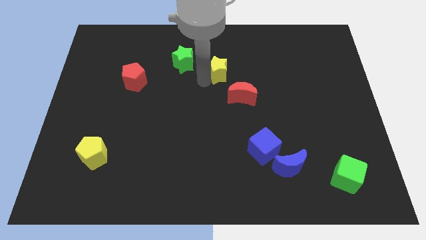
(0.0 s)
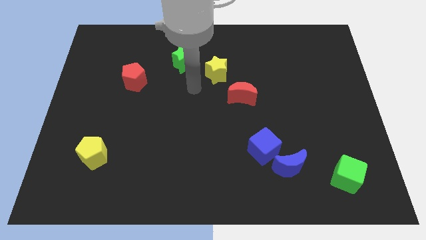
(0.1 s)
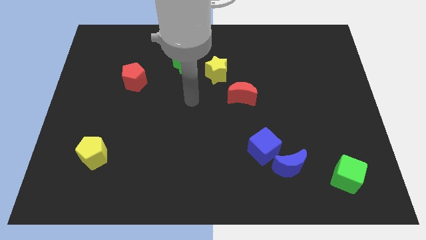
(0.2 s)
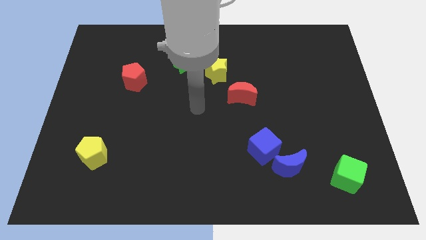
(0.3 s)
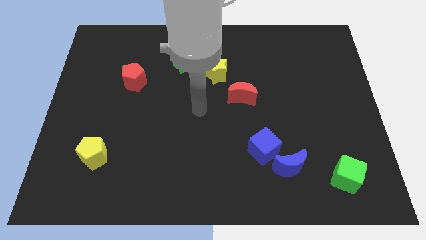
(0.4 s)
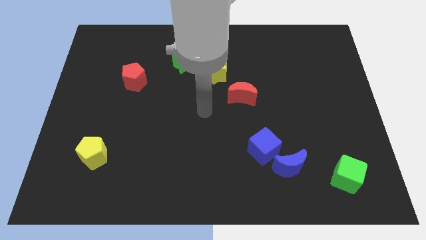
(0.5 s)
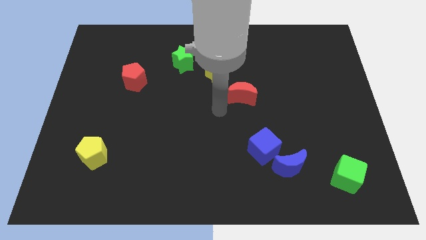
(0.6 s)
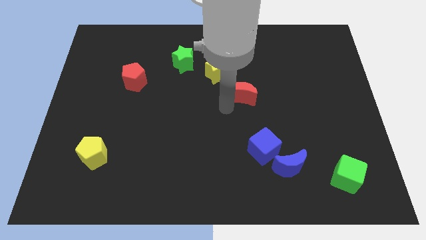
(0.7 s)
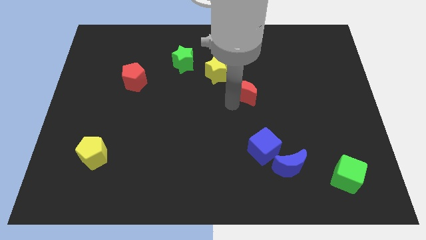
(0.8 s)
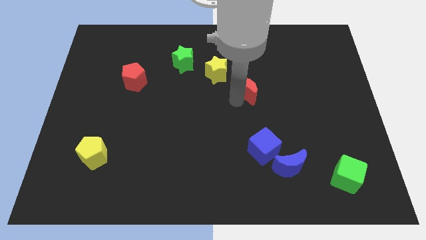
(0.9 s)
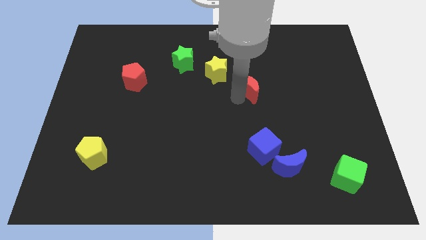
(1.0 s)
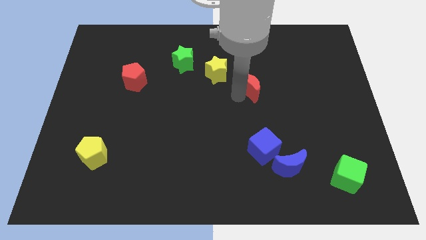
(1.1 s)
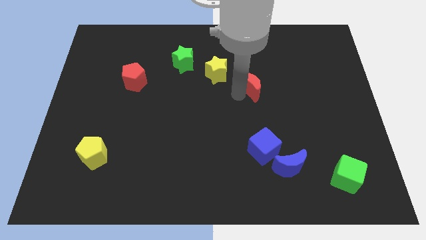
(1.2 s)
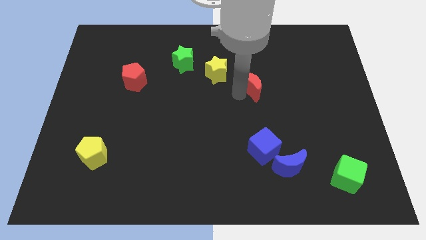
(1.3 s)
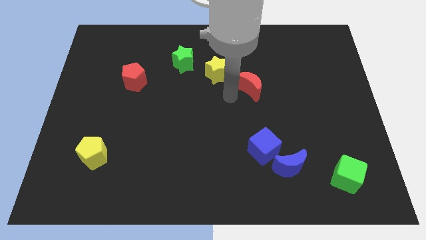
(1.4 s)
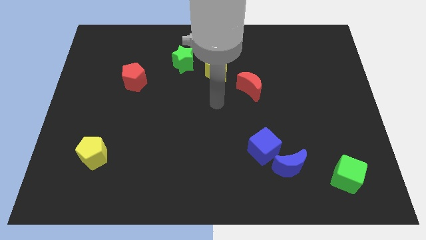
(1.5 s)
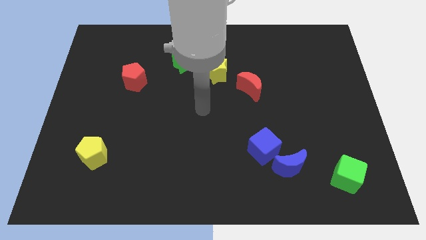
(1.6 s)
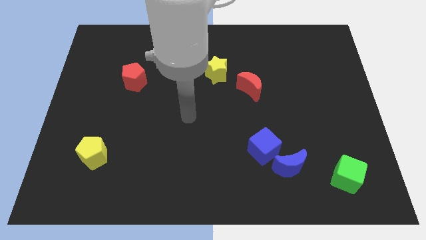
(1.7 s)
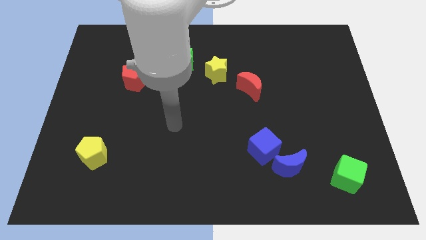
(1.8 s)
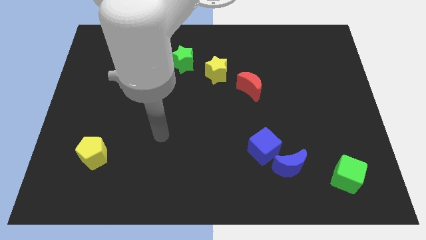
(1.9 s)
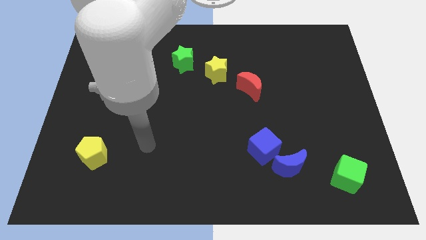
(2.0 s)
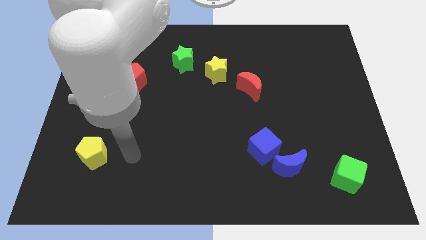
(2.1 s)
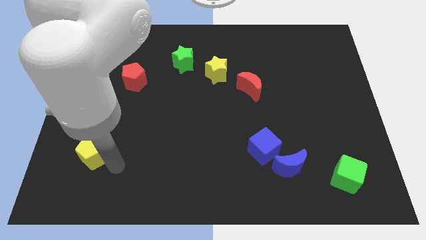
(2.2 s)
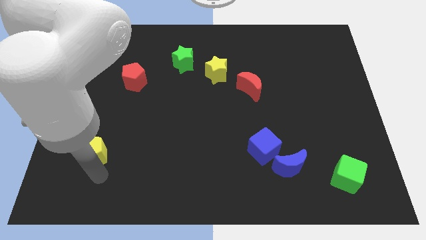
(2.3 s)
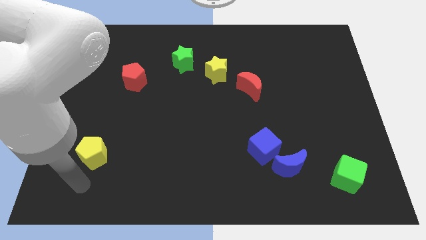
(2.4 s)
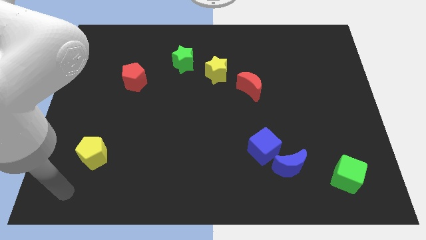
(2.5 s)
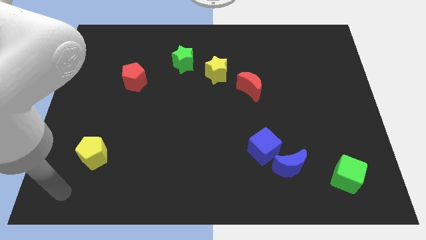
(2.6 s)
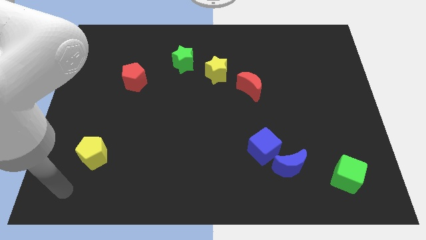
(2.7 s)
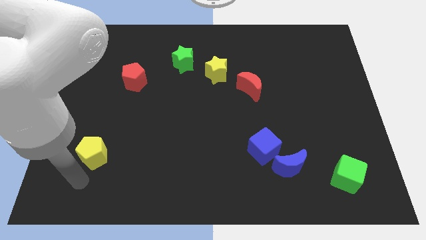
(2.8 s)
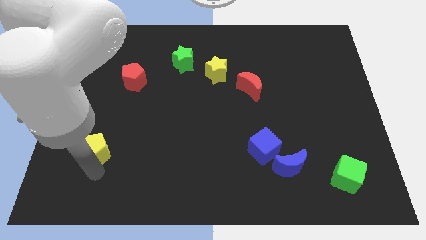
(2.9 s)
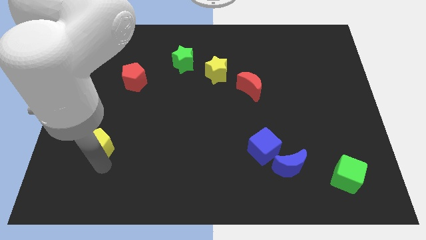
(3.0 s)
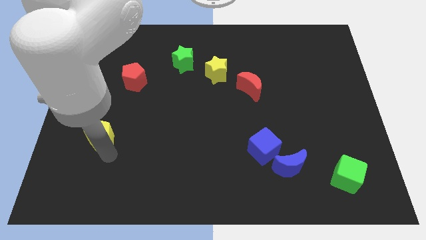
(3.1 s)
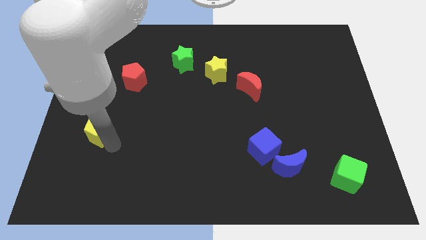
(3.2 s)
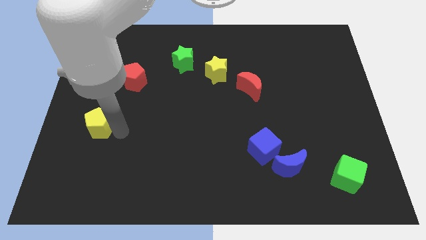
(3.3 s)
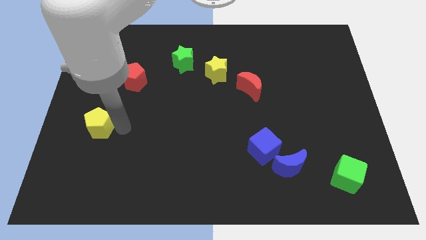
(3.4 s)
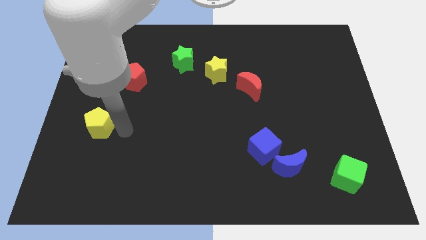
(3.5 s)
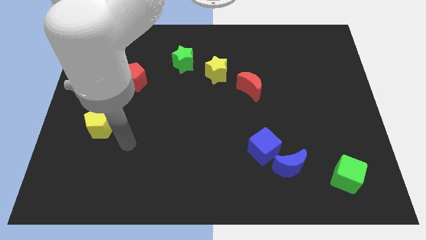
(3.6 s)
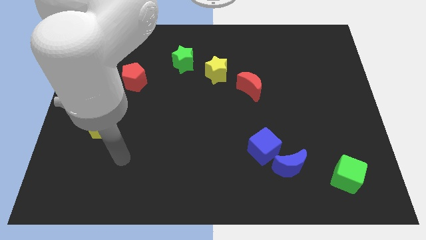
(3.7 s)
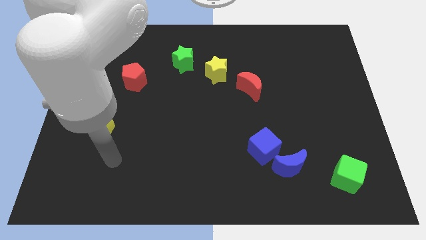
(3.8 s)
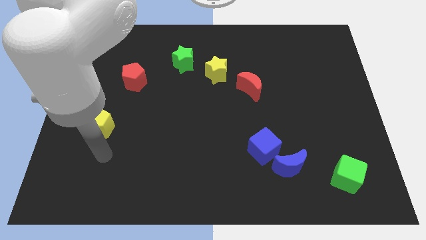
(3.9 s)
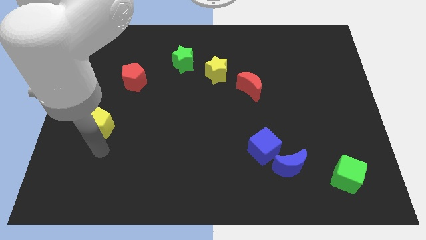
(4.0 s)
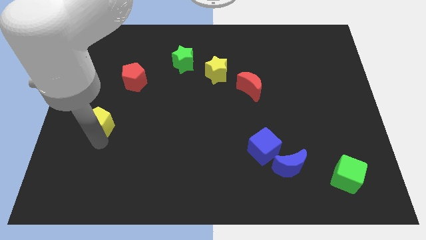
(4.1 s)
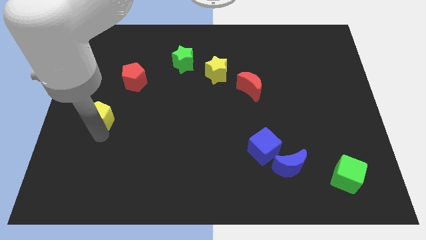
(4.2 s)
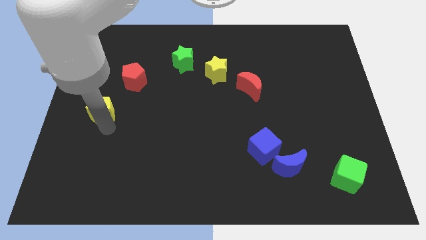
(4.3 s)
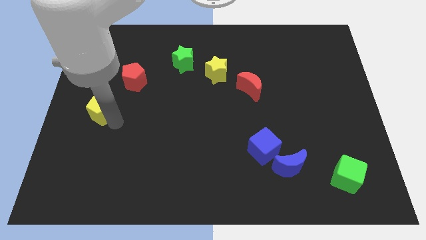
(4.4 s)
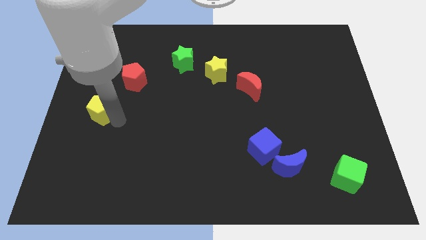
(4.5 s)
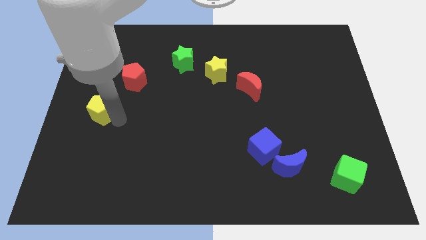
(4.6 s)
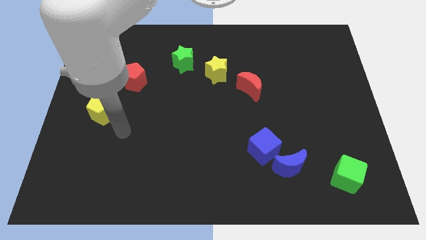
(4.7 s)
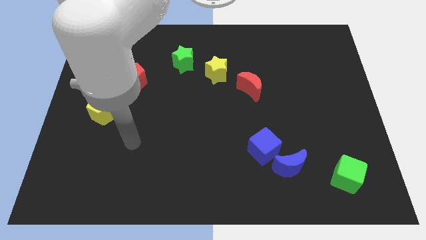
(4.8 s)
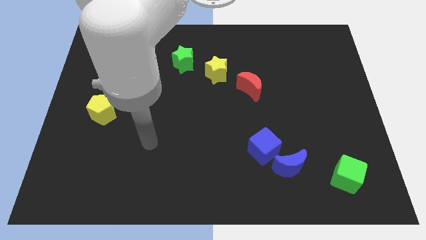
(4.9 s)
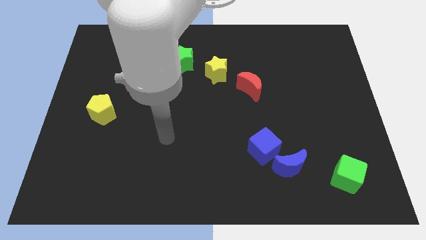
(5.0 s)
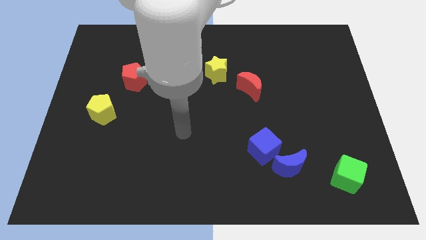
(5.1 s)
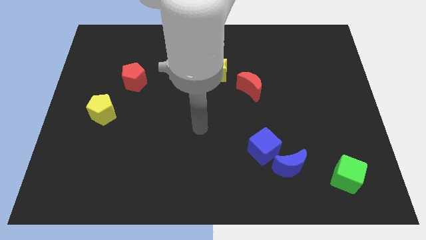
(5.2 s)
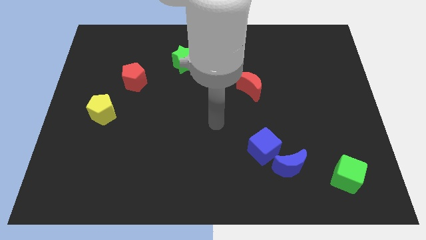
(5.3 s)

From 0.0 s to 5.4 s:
push yellow pentagon upwards

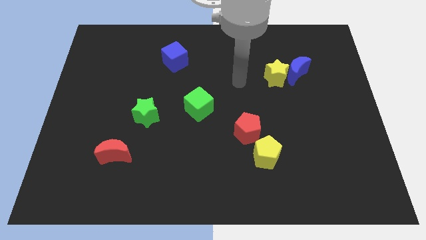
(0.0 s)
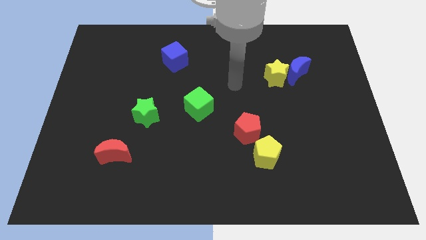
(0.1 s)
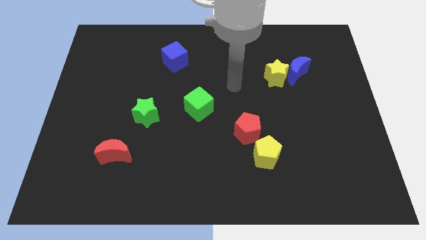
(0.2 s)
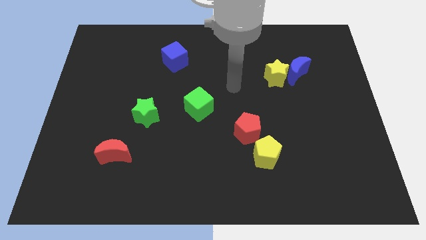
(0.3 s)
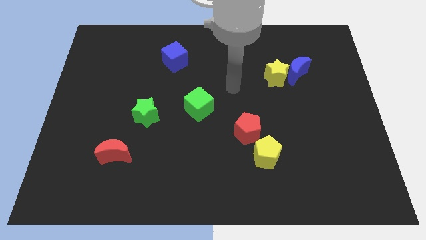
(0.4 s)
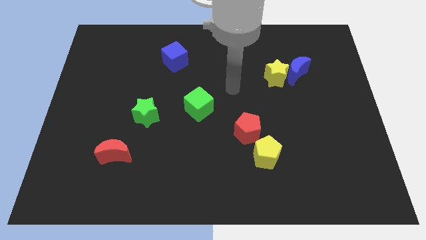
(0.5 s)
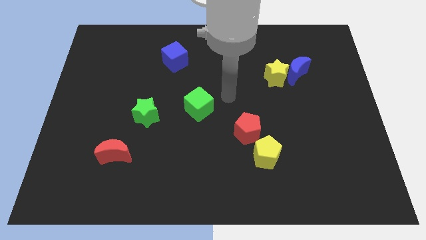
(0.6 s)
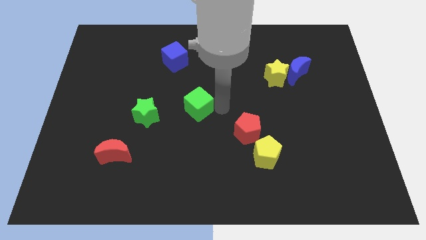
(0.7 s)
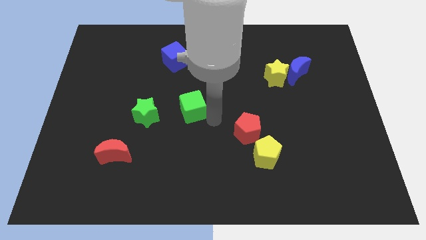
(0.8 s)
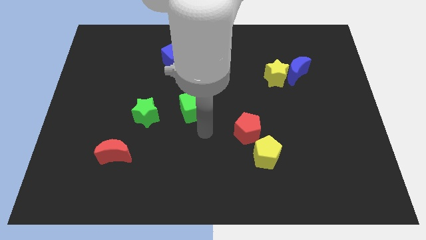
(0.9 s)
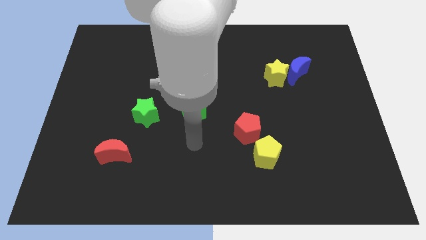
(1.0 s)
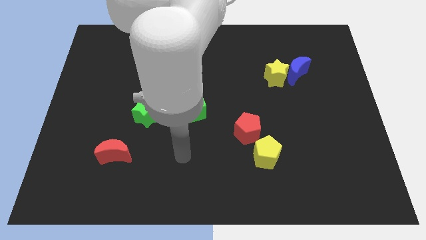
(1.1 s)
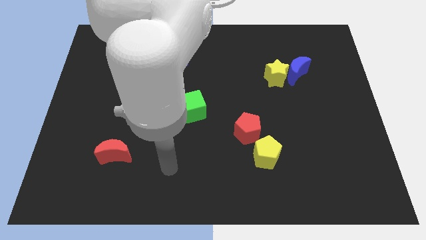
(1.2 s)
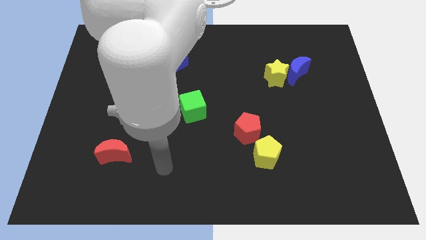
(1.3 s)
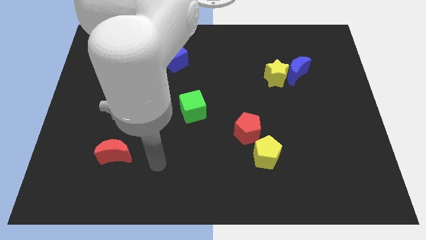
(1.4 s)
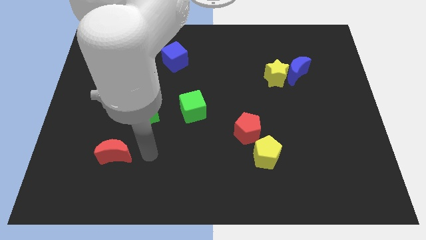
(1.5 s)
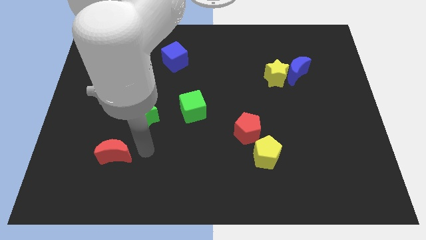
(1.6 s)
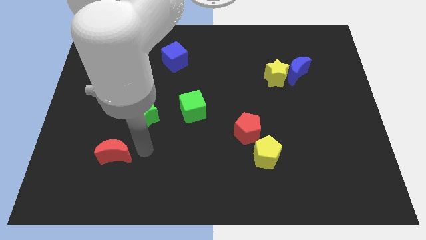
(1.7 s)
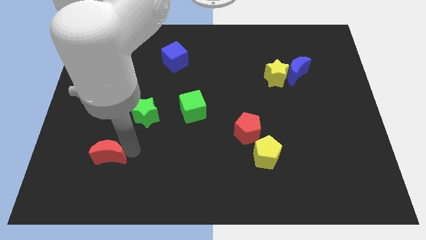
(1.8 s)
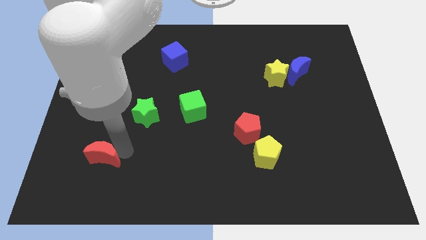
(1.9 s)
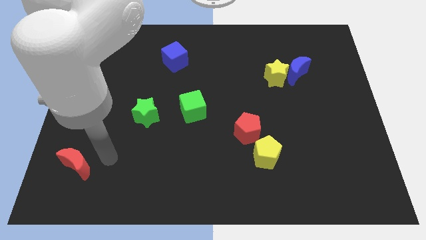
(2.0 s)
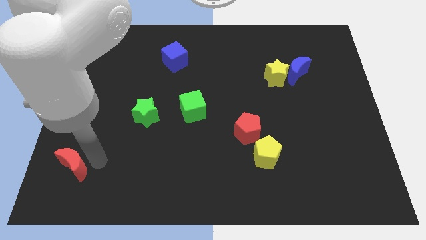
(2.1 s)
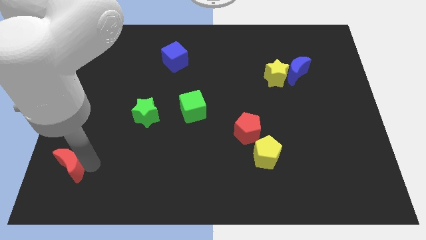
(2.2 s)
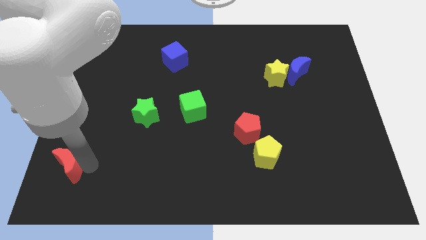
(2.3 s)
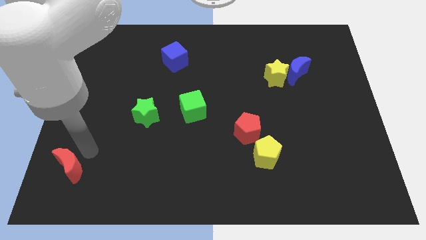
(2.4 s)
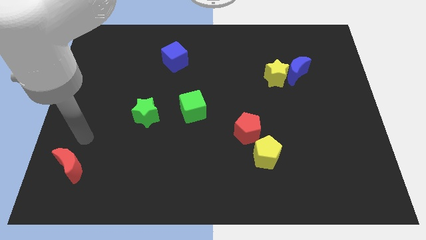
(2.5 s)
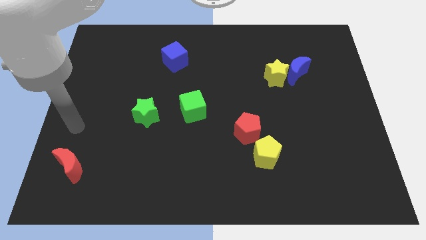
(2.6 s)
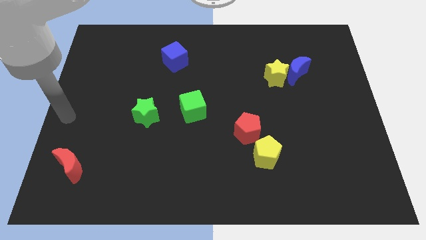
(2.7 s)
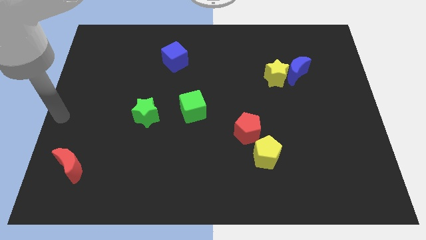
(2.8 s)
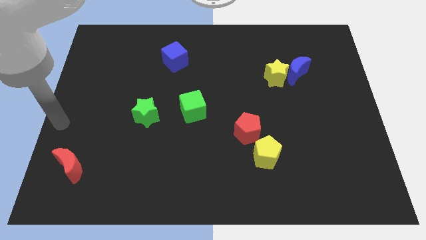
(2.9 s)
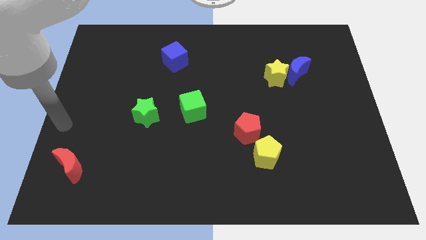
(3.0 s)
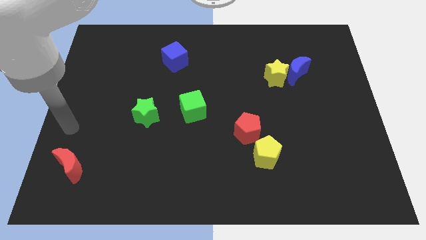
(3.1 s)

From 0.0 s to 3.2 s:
place the red moon towards bottom left

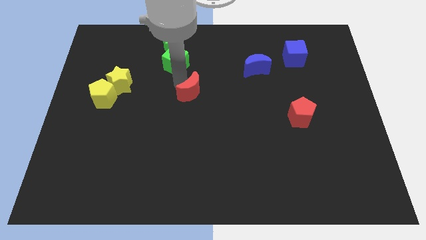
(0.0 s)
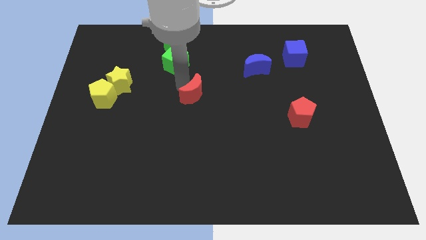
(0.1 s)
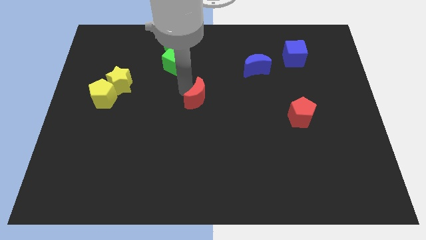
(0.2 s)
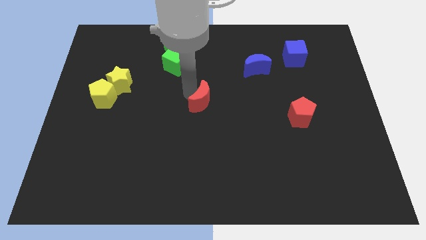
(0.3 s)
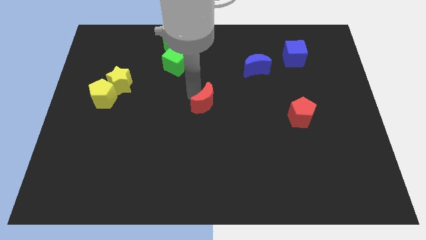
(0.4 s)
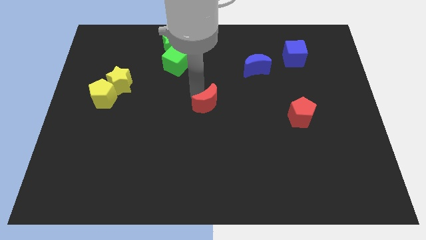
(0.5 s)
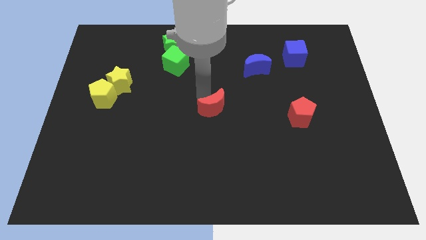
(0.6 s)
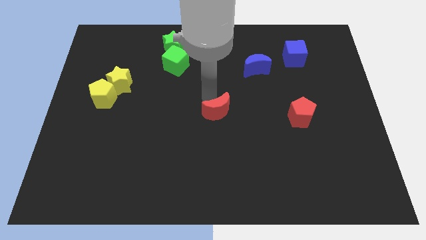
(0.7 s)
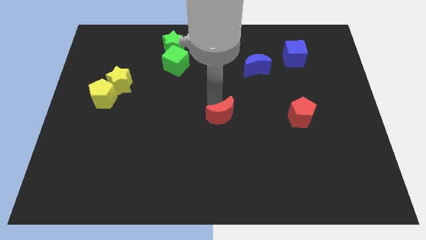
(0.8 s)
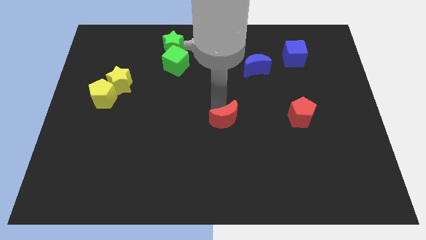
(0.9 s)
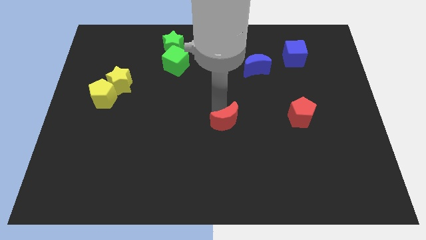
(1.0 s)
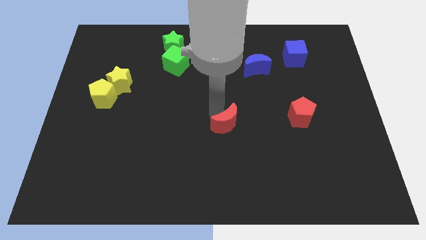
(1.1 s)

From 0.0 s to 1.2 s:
push the red crescent to the red pentagon
